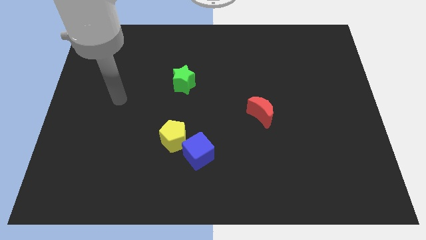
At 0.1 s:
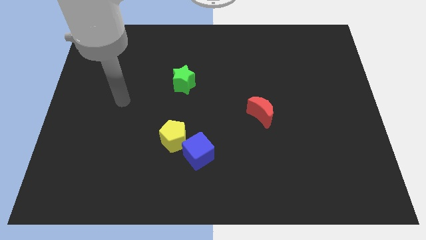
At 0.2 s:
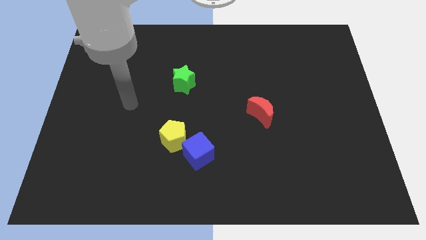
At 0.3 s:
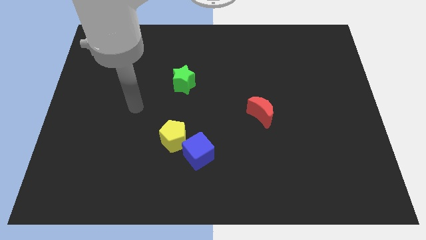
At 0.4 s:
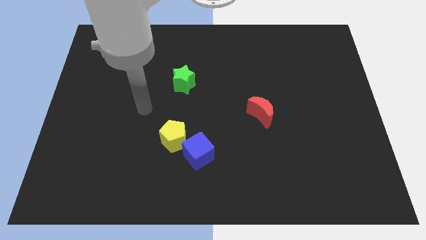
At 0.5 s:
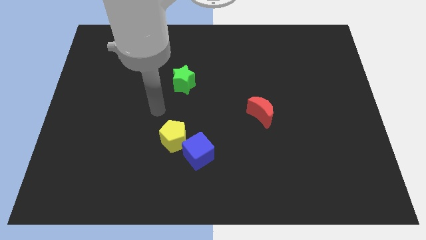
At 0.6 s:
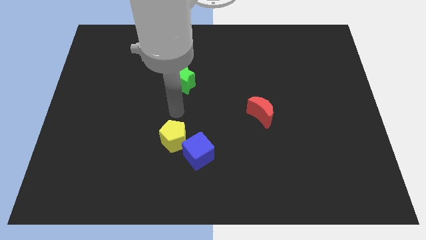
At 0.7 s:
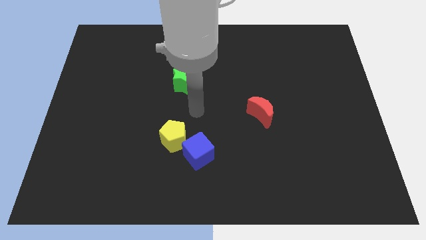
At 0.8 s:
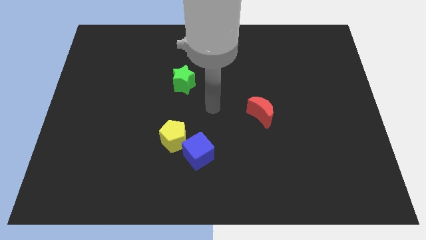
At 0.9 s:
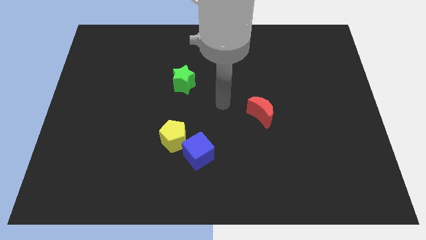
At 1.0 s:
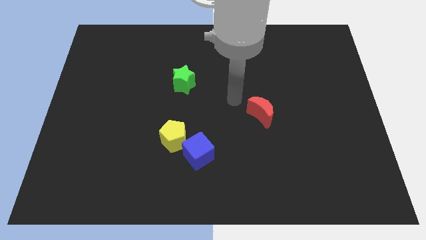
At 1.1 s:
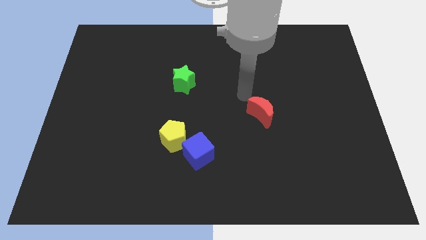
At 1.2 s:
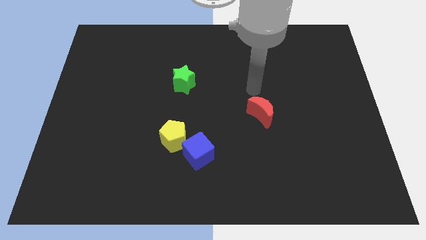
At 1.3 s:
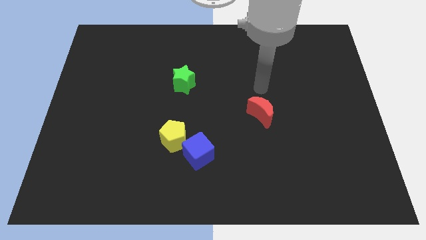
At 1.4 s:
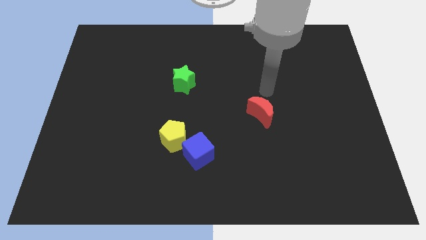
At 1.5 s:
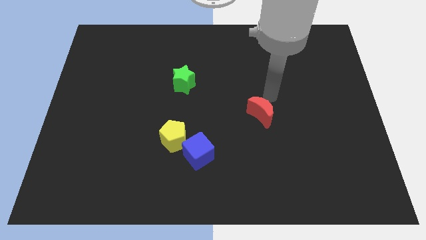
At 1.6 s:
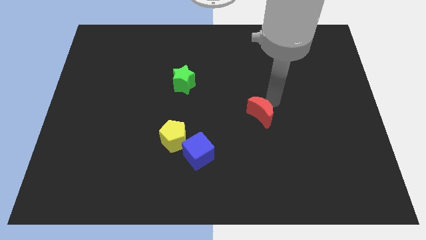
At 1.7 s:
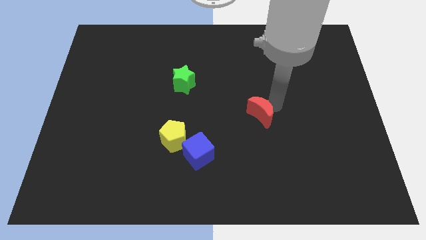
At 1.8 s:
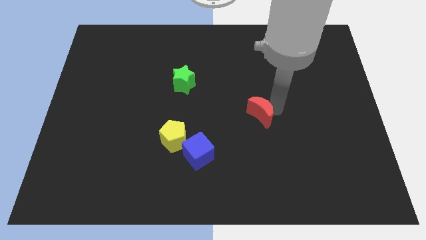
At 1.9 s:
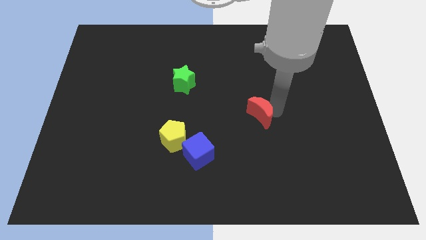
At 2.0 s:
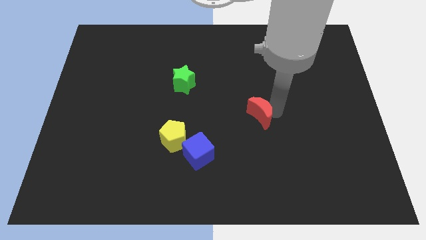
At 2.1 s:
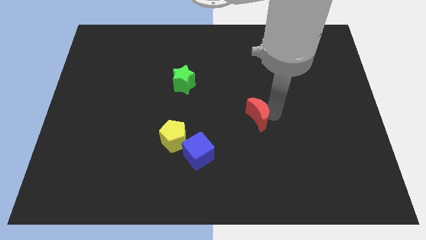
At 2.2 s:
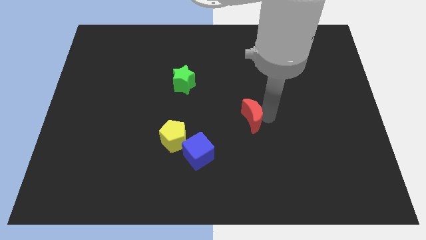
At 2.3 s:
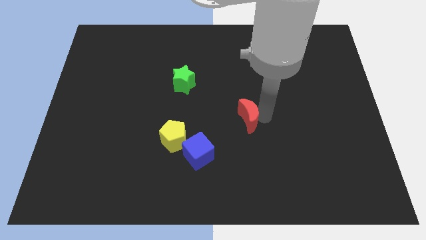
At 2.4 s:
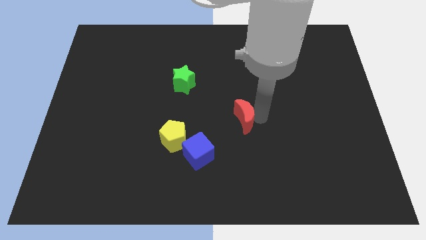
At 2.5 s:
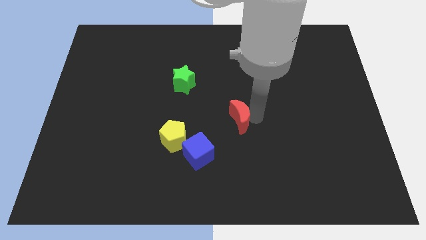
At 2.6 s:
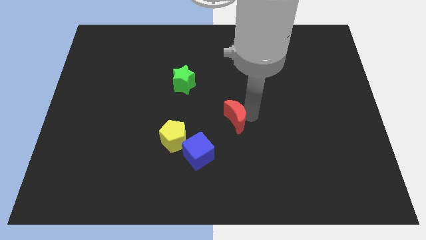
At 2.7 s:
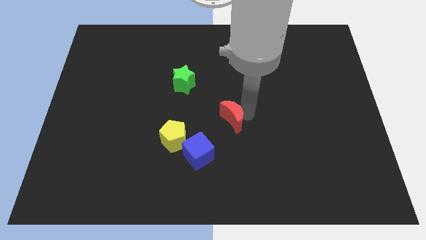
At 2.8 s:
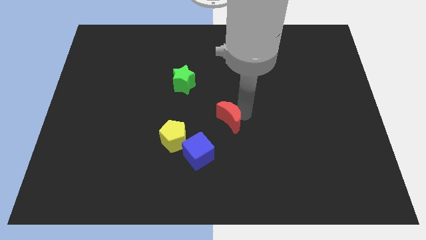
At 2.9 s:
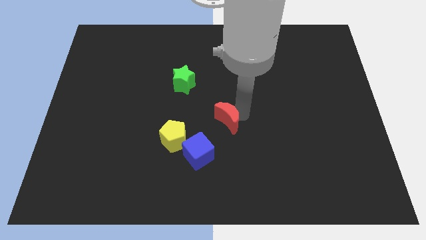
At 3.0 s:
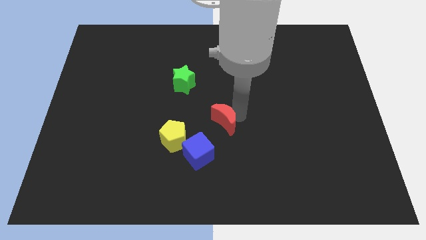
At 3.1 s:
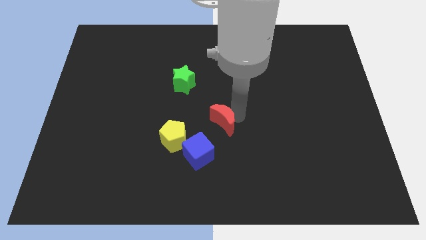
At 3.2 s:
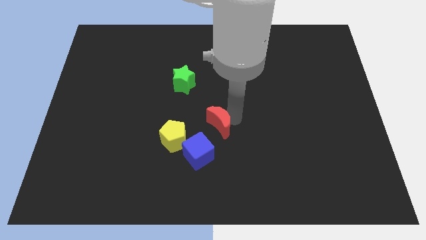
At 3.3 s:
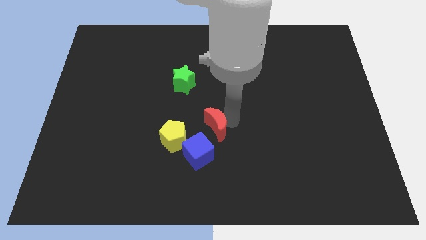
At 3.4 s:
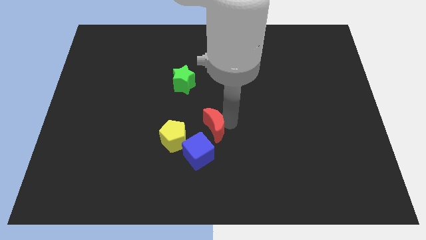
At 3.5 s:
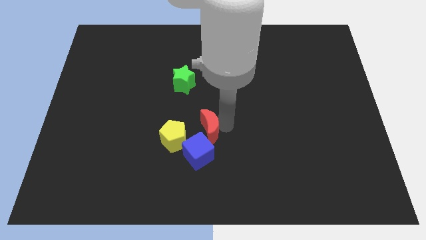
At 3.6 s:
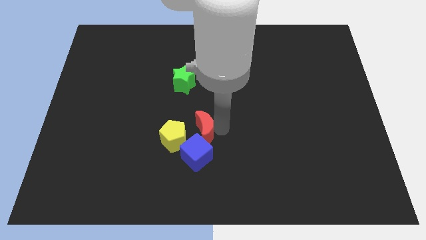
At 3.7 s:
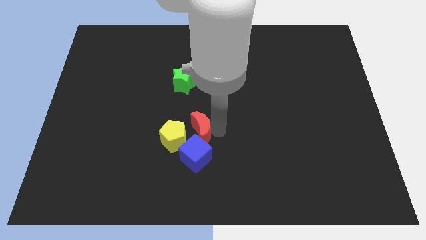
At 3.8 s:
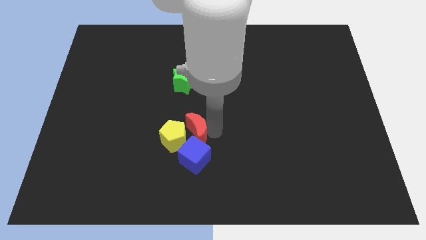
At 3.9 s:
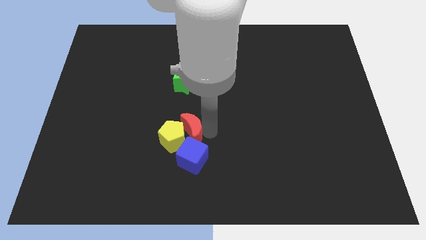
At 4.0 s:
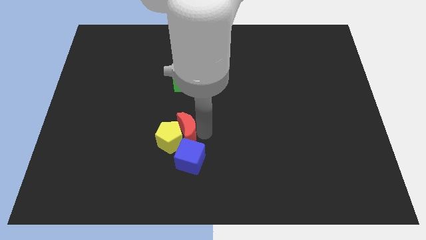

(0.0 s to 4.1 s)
slide the moon next to the pentagon

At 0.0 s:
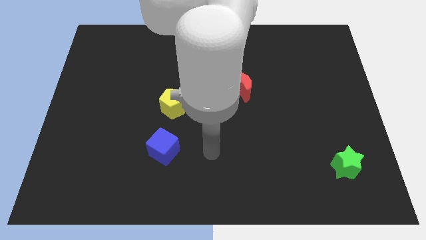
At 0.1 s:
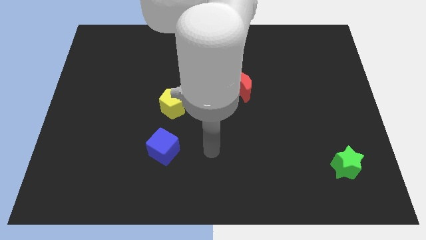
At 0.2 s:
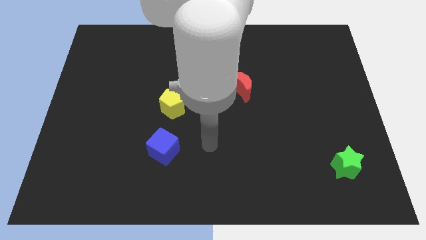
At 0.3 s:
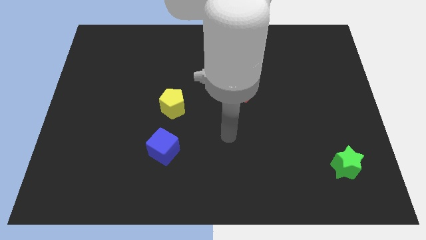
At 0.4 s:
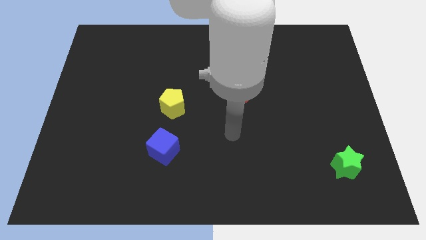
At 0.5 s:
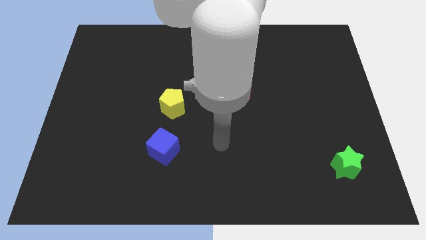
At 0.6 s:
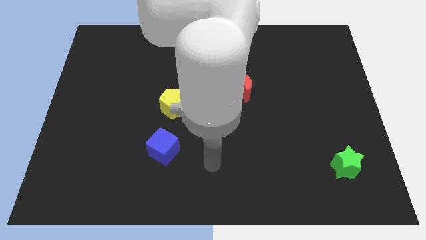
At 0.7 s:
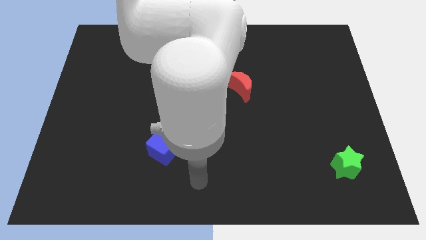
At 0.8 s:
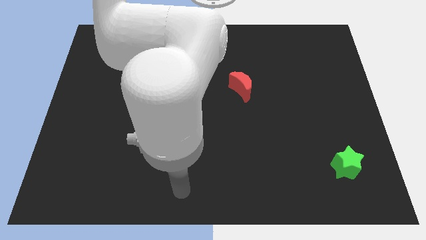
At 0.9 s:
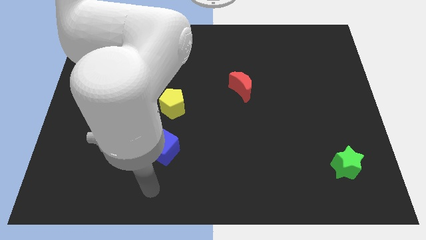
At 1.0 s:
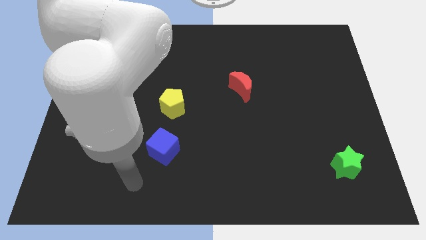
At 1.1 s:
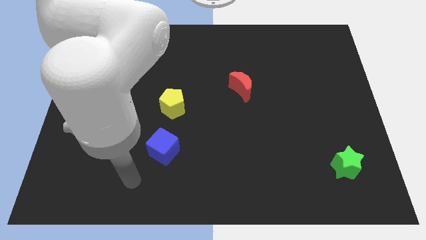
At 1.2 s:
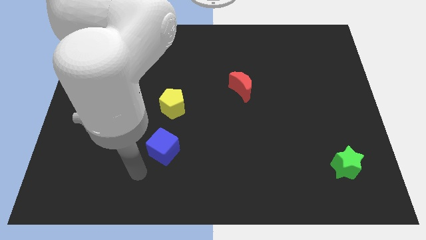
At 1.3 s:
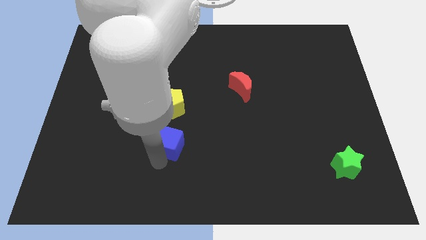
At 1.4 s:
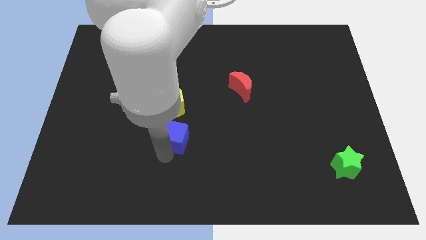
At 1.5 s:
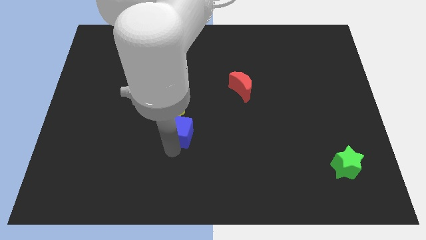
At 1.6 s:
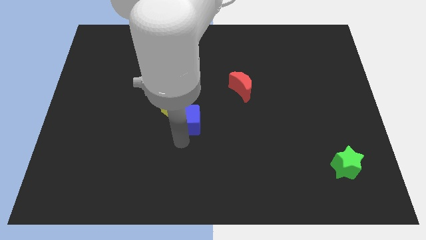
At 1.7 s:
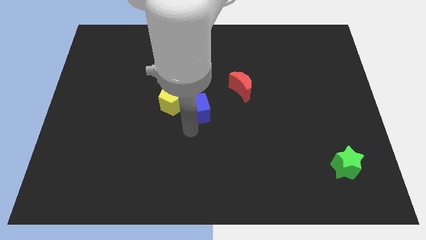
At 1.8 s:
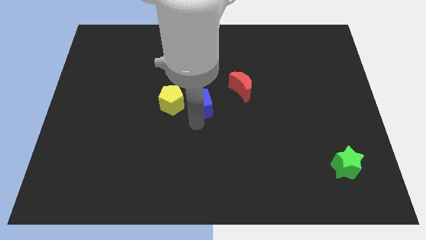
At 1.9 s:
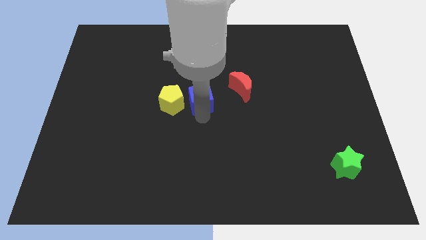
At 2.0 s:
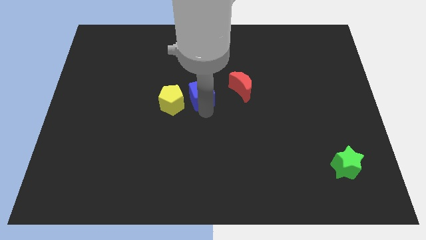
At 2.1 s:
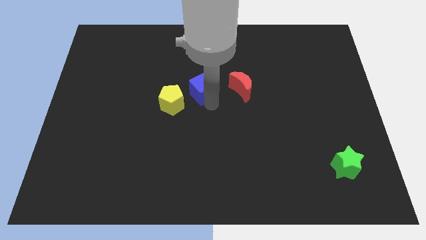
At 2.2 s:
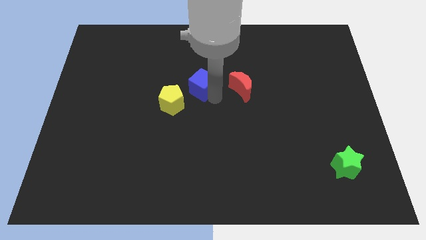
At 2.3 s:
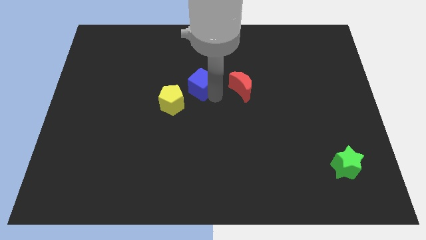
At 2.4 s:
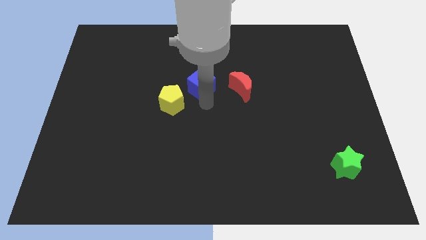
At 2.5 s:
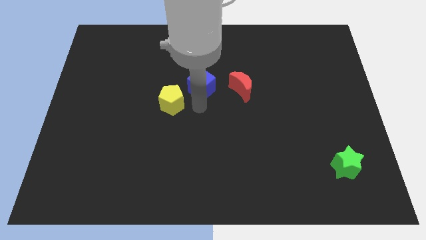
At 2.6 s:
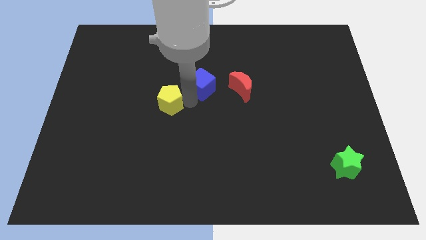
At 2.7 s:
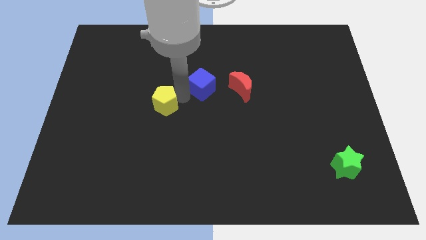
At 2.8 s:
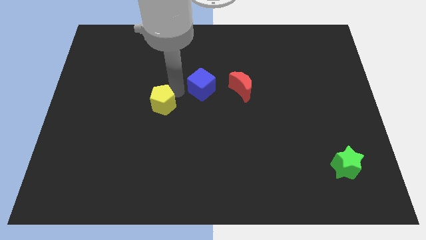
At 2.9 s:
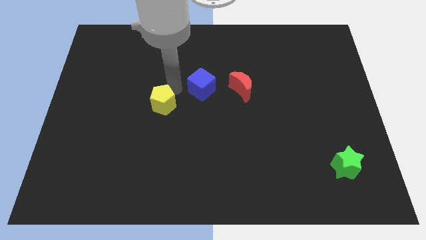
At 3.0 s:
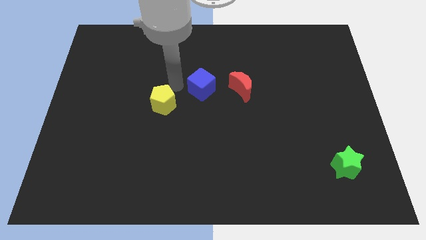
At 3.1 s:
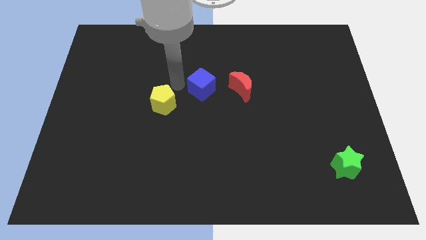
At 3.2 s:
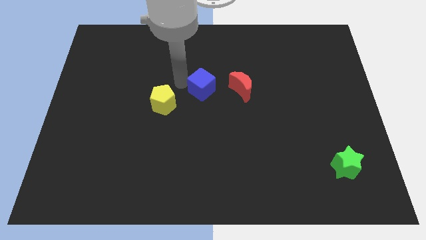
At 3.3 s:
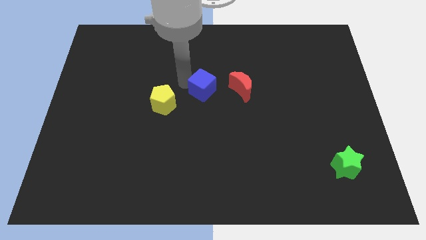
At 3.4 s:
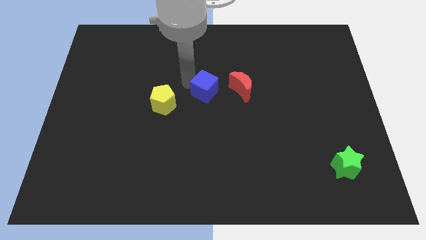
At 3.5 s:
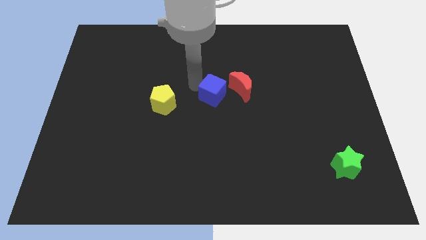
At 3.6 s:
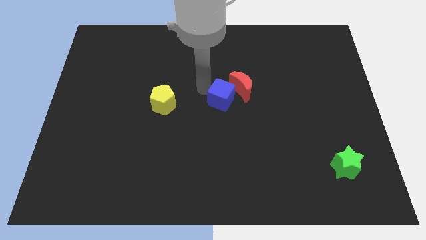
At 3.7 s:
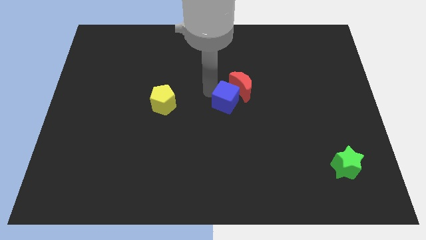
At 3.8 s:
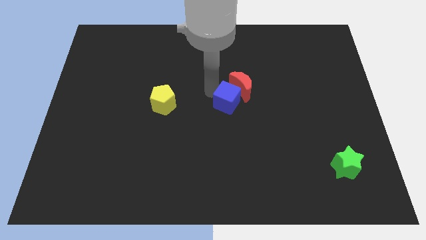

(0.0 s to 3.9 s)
put the blue cube to the moon

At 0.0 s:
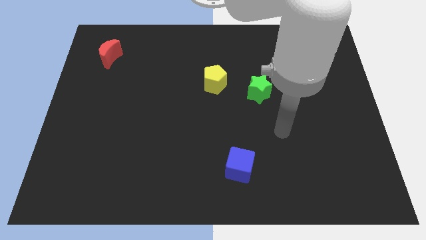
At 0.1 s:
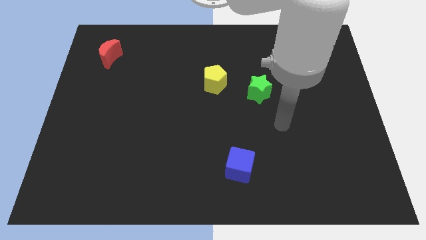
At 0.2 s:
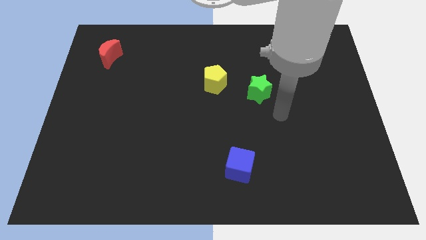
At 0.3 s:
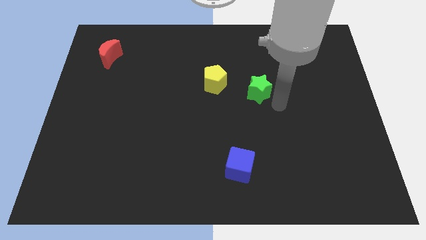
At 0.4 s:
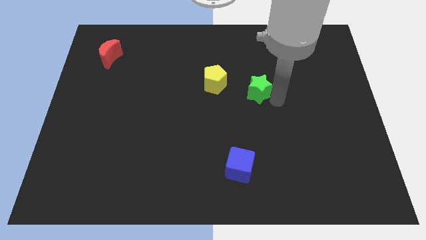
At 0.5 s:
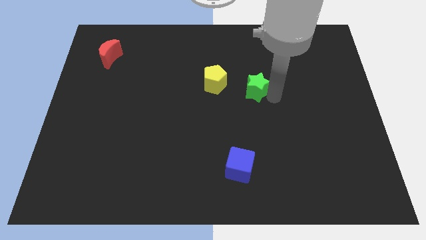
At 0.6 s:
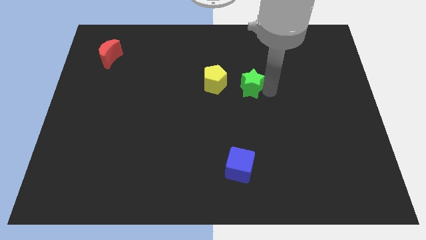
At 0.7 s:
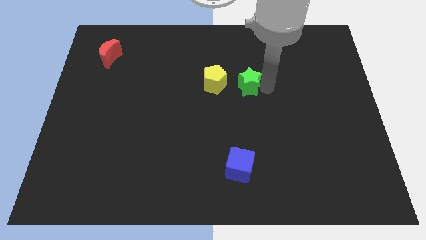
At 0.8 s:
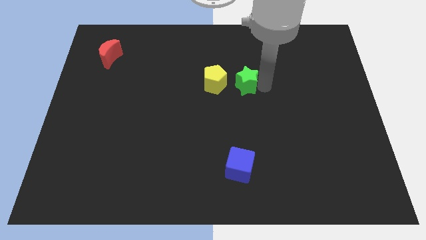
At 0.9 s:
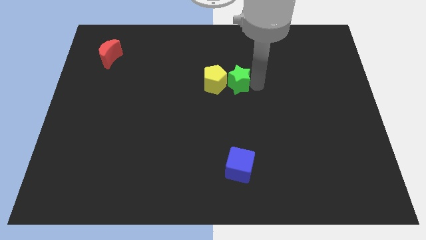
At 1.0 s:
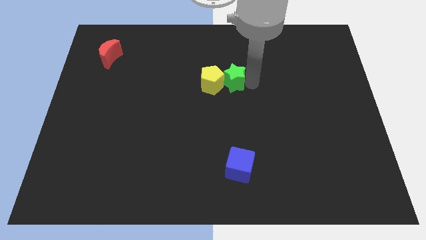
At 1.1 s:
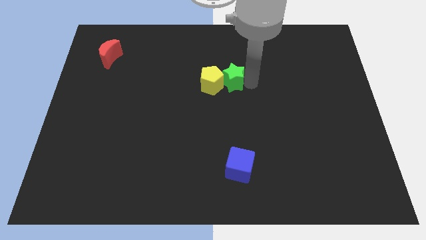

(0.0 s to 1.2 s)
put the green block to the pentagon
